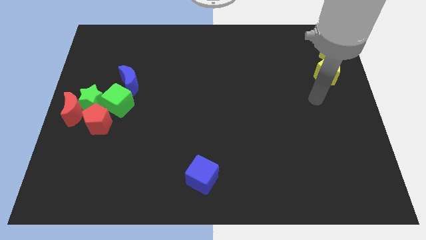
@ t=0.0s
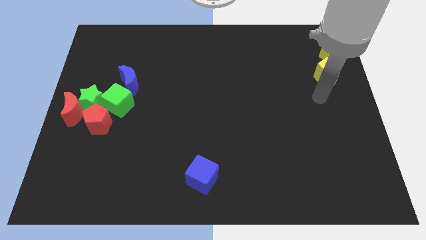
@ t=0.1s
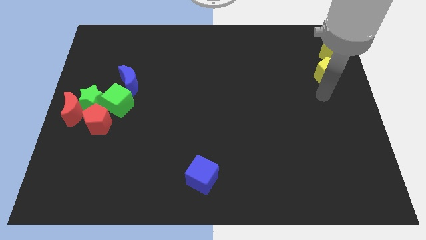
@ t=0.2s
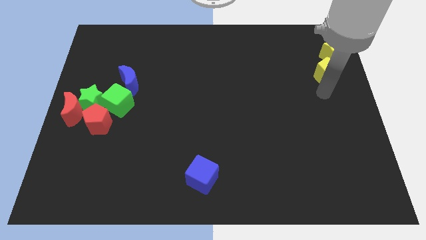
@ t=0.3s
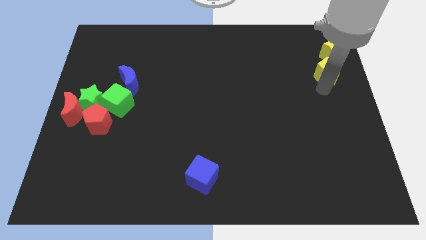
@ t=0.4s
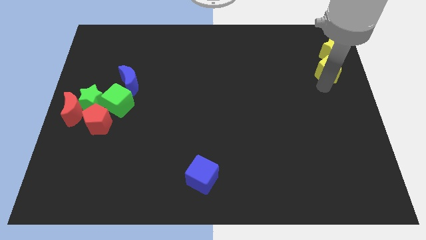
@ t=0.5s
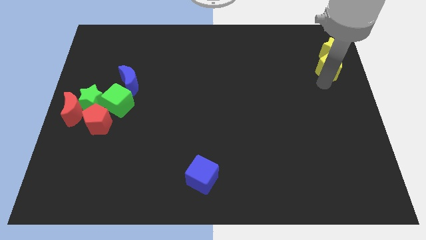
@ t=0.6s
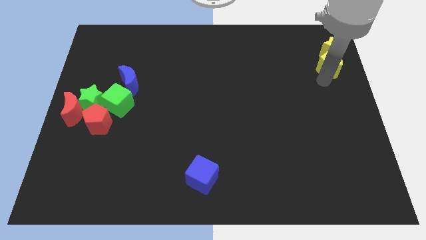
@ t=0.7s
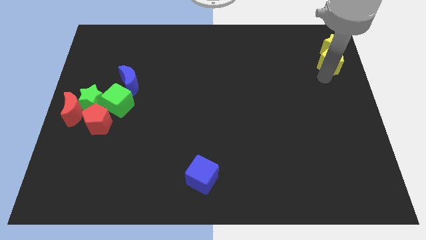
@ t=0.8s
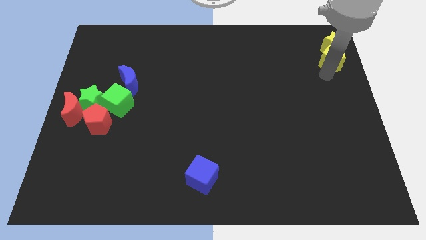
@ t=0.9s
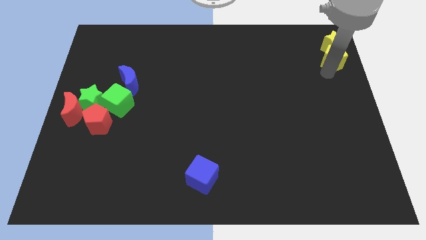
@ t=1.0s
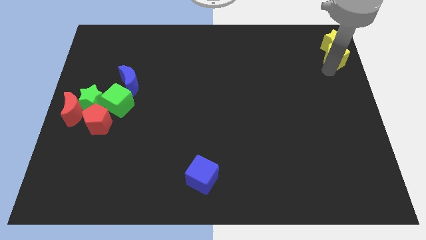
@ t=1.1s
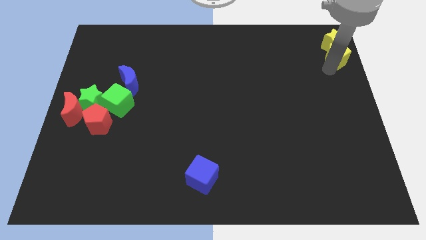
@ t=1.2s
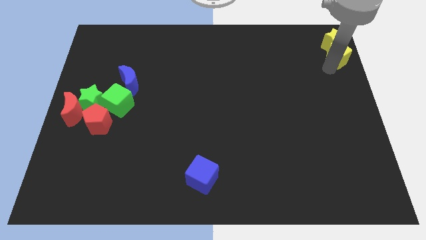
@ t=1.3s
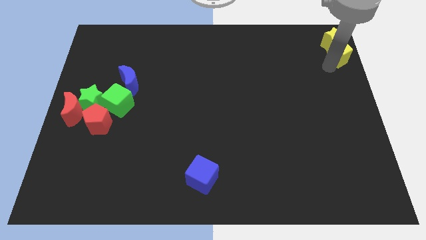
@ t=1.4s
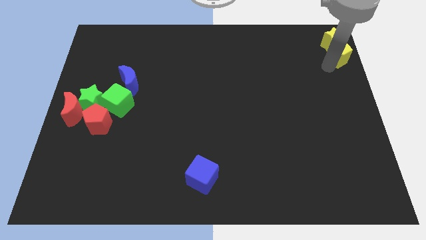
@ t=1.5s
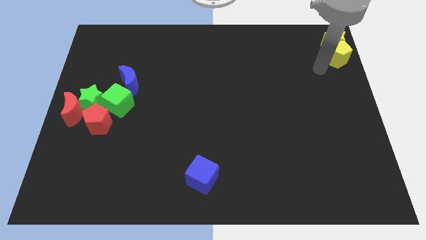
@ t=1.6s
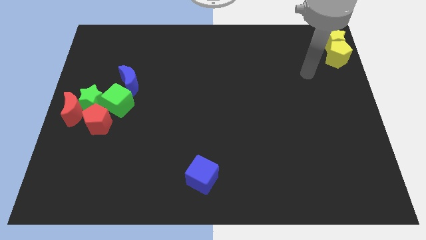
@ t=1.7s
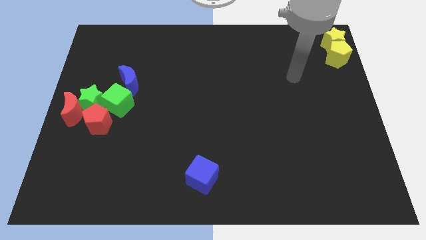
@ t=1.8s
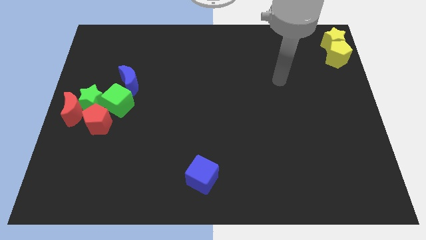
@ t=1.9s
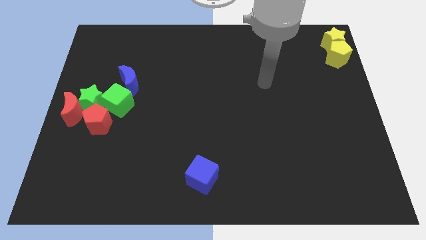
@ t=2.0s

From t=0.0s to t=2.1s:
push yellow blocks towards top right

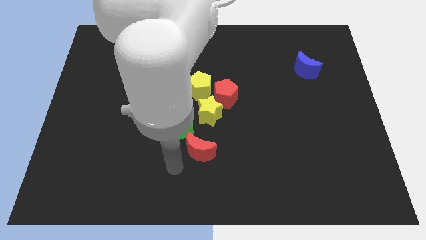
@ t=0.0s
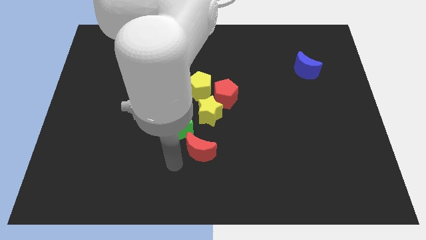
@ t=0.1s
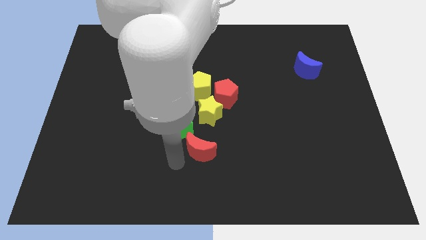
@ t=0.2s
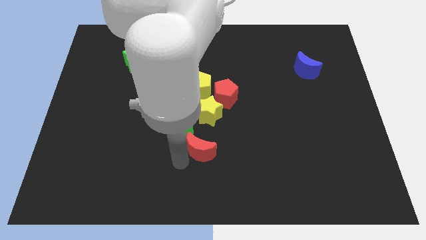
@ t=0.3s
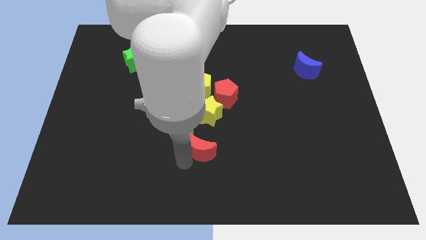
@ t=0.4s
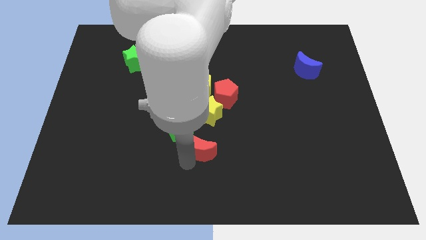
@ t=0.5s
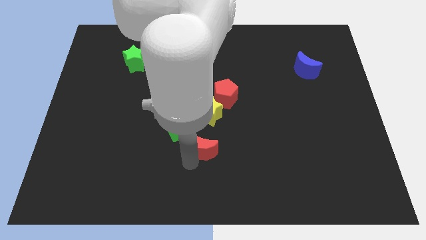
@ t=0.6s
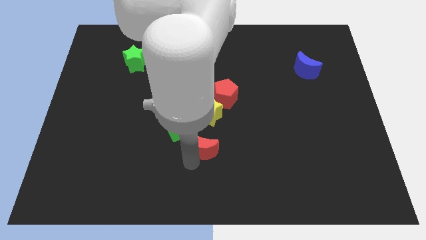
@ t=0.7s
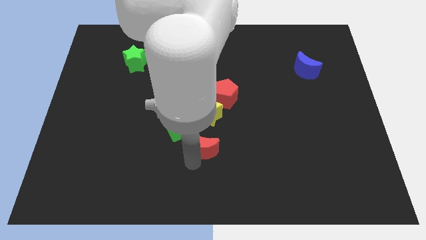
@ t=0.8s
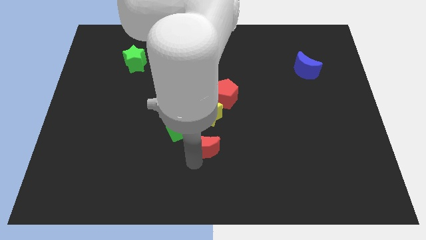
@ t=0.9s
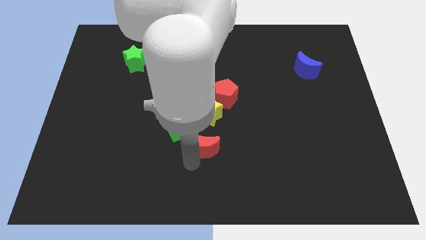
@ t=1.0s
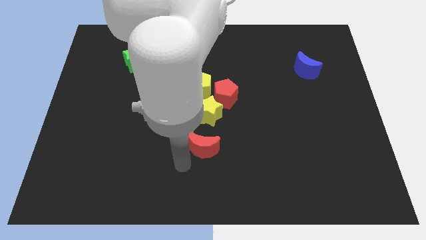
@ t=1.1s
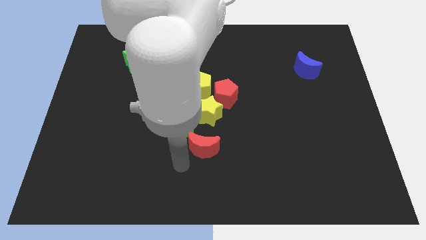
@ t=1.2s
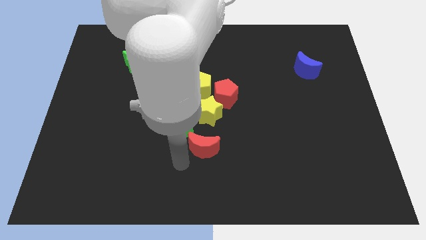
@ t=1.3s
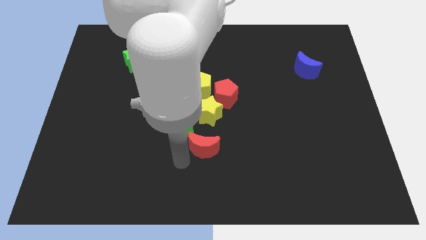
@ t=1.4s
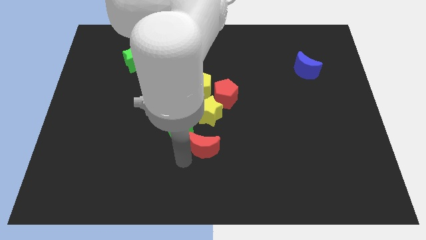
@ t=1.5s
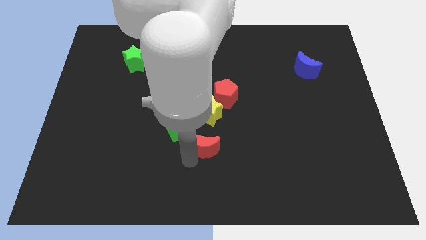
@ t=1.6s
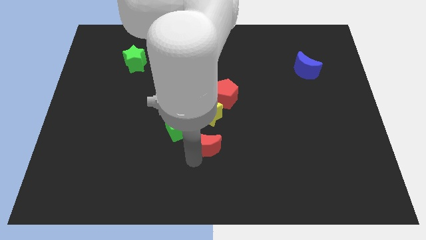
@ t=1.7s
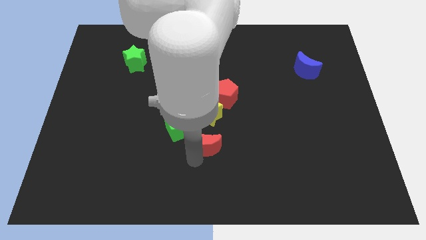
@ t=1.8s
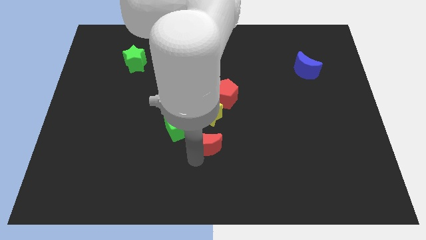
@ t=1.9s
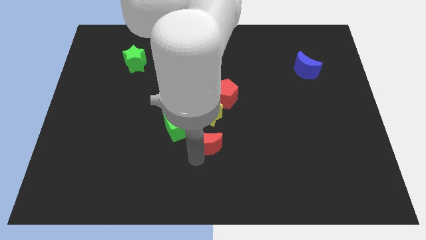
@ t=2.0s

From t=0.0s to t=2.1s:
move the red crescent below the yellow star

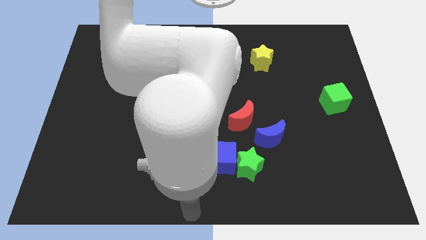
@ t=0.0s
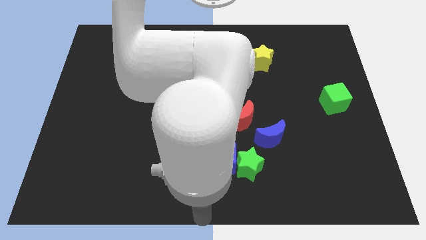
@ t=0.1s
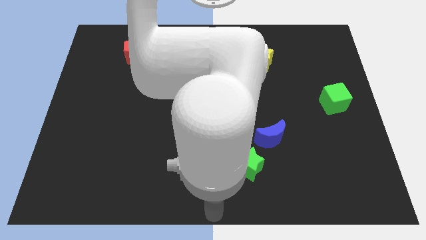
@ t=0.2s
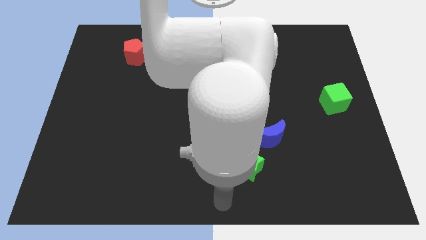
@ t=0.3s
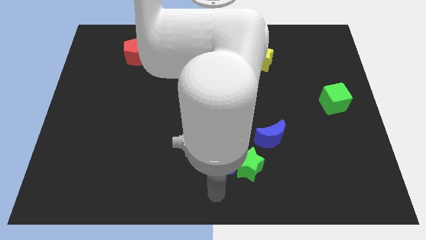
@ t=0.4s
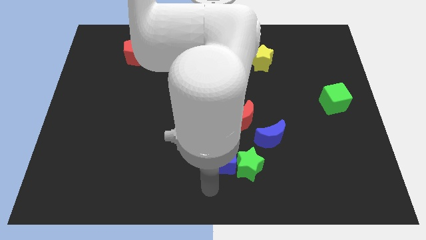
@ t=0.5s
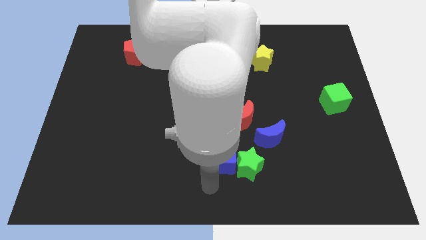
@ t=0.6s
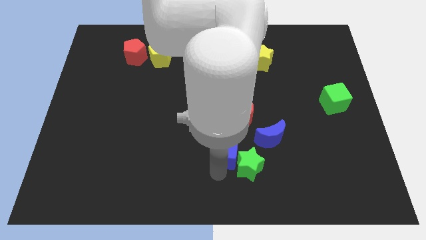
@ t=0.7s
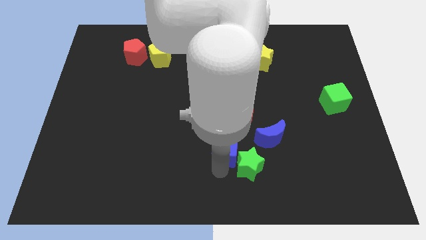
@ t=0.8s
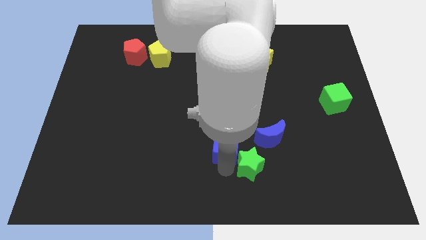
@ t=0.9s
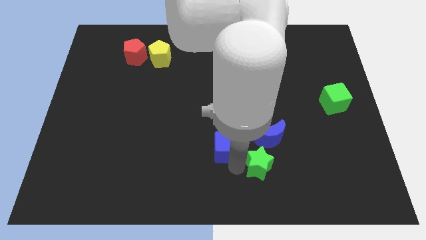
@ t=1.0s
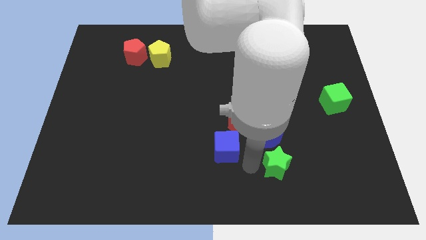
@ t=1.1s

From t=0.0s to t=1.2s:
move the blue cube slightly upwards

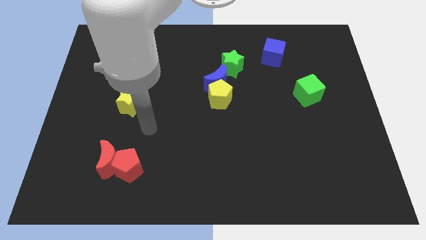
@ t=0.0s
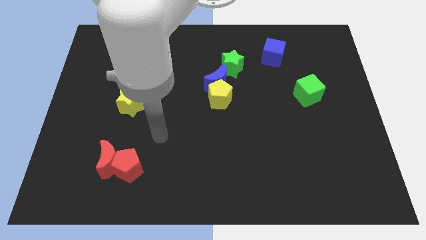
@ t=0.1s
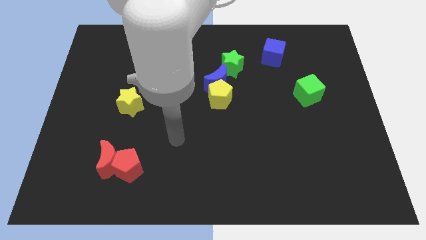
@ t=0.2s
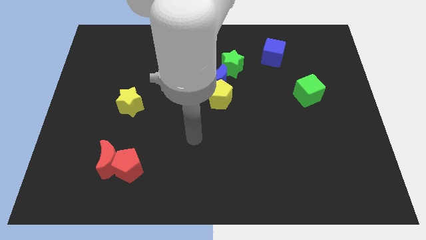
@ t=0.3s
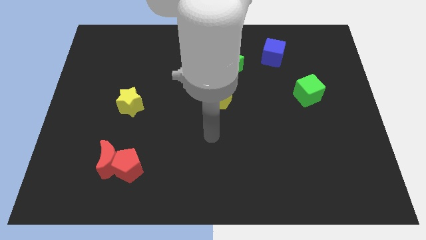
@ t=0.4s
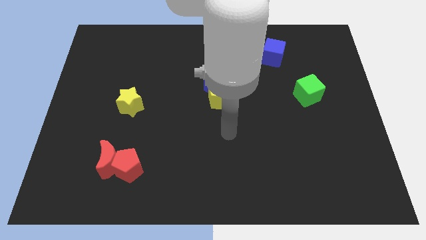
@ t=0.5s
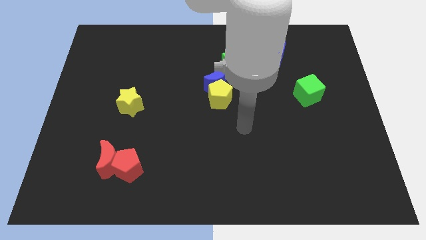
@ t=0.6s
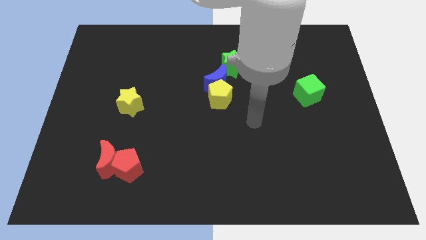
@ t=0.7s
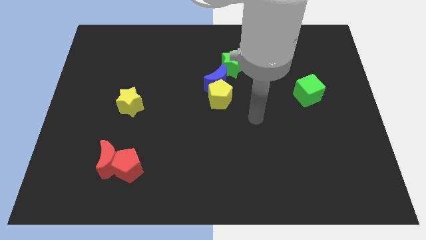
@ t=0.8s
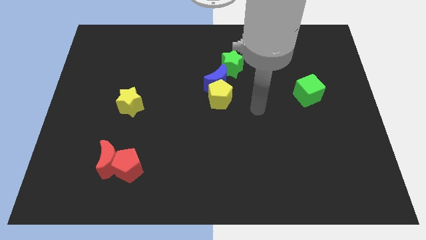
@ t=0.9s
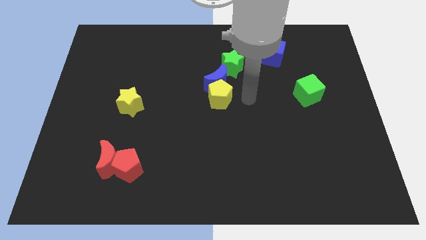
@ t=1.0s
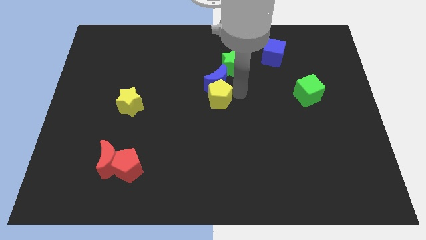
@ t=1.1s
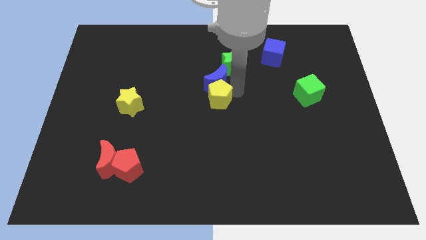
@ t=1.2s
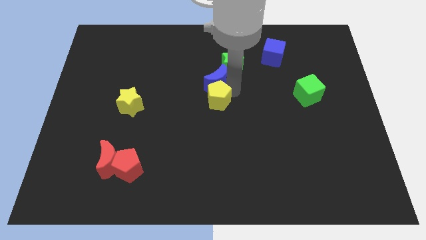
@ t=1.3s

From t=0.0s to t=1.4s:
push your hand at the top right of the yellow pentagon

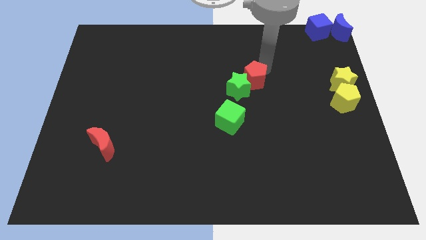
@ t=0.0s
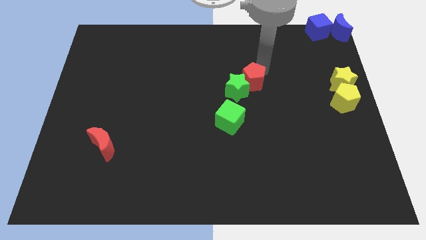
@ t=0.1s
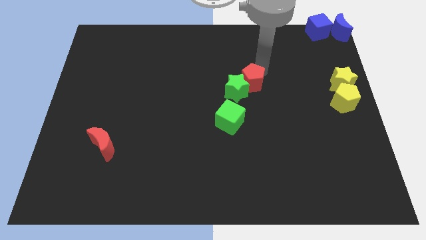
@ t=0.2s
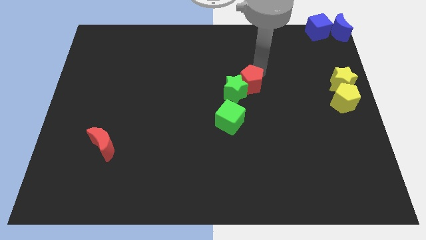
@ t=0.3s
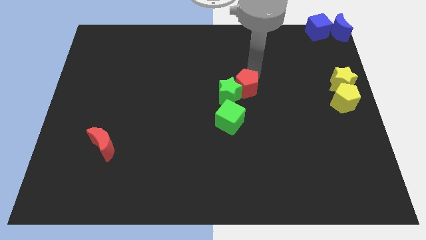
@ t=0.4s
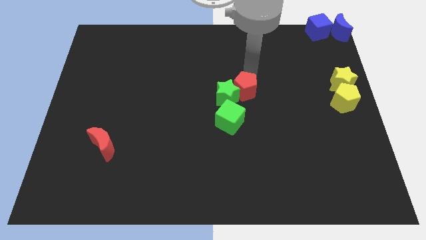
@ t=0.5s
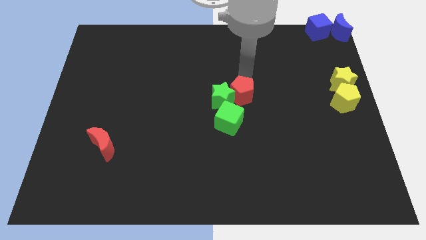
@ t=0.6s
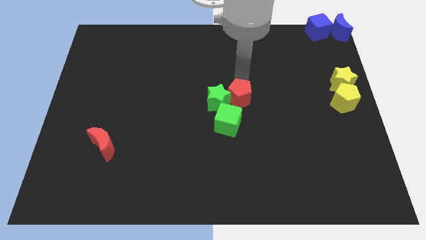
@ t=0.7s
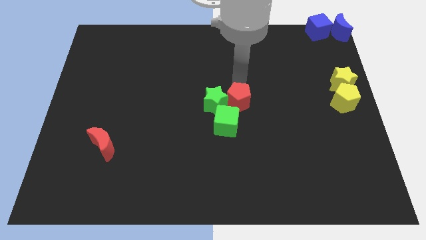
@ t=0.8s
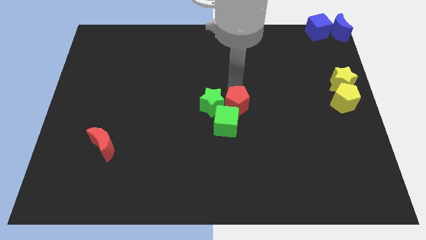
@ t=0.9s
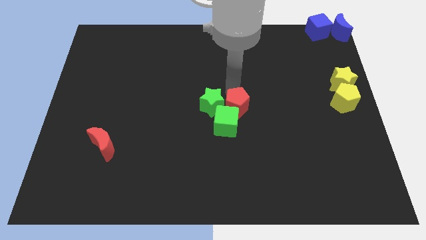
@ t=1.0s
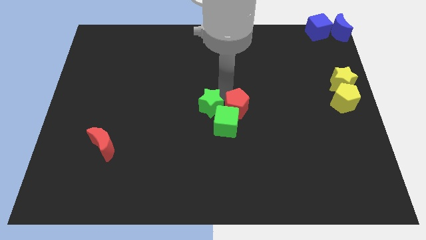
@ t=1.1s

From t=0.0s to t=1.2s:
push red pentagon towards green cube

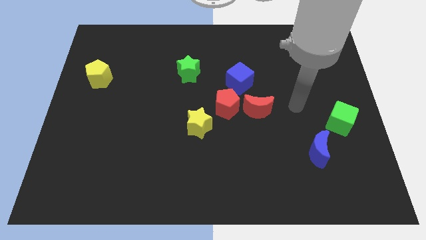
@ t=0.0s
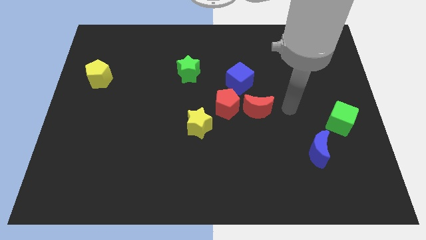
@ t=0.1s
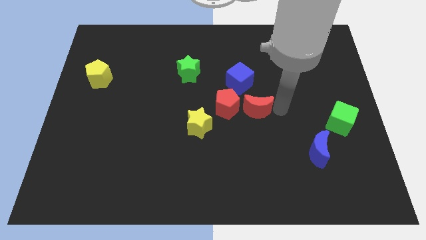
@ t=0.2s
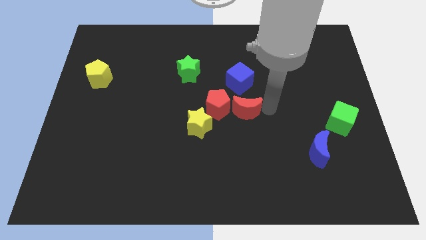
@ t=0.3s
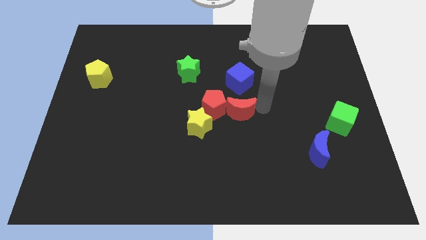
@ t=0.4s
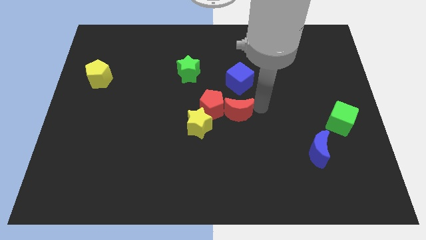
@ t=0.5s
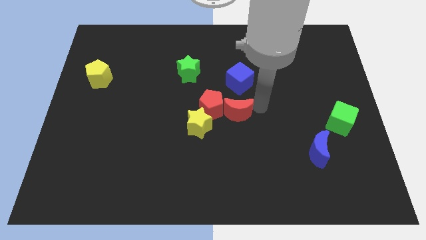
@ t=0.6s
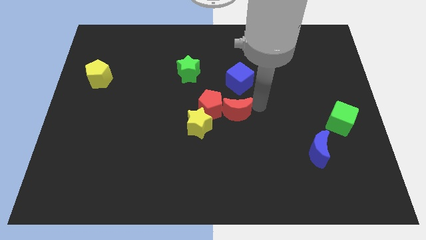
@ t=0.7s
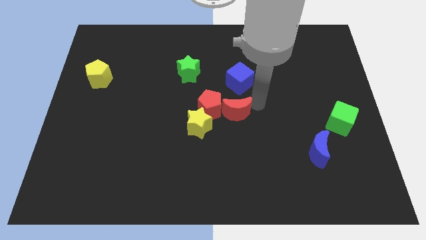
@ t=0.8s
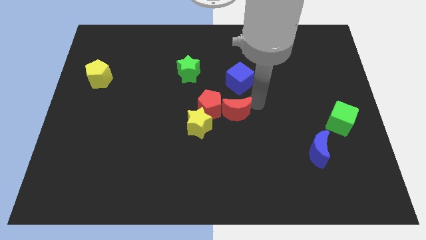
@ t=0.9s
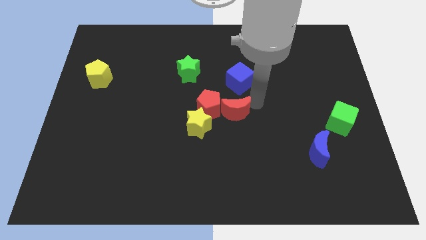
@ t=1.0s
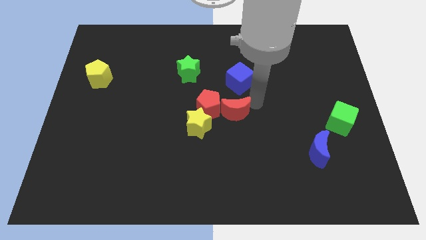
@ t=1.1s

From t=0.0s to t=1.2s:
push the red blocks towards the left side of the board
